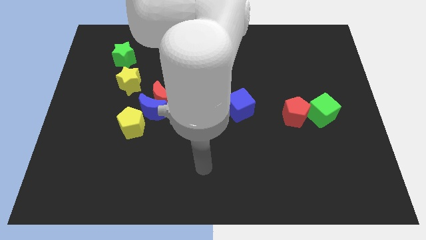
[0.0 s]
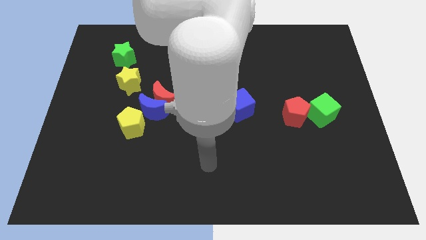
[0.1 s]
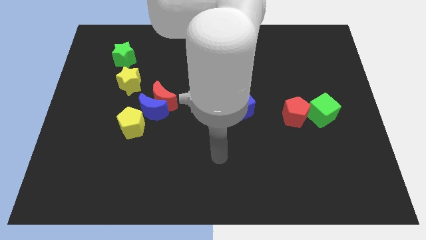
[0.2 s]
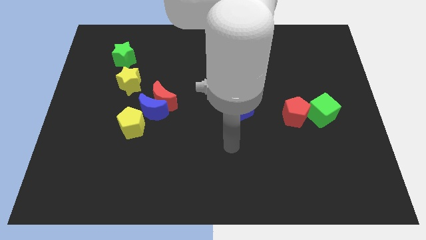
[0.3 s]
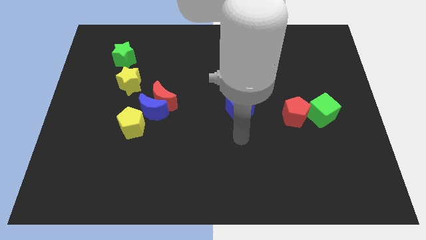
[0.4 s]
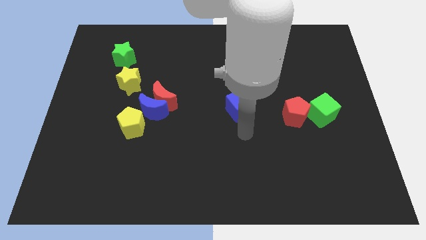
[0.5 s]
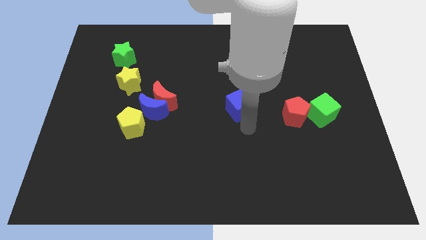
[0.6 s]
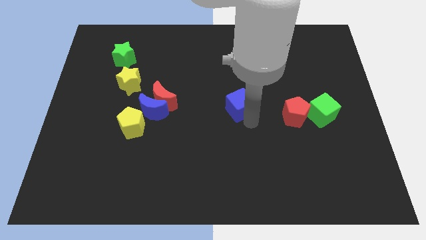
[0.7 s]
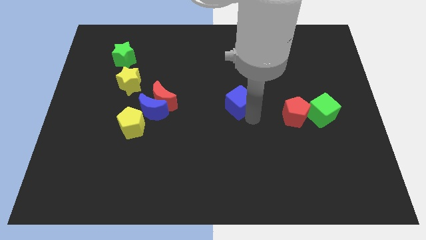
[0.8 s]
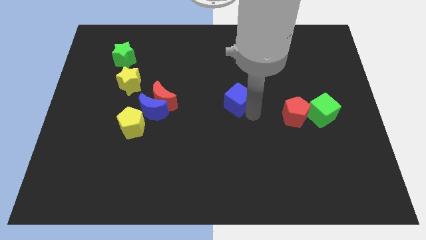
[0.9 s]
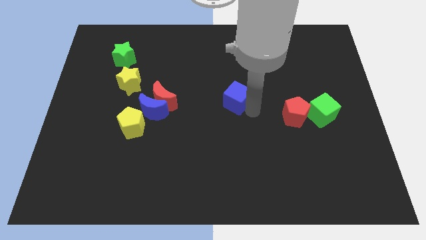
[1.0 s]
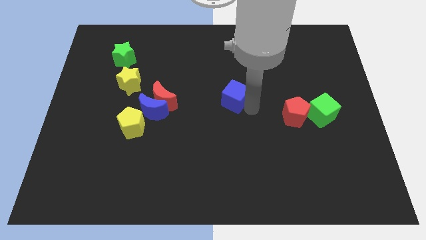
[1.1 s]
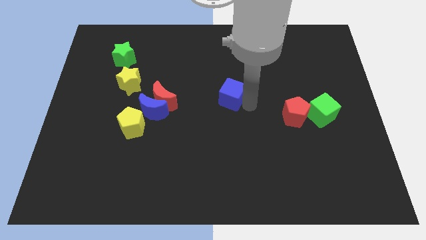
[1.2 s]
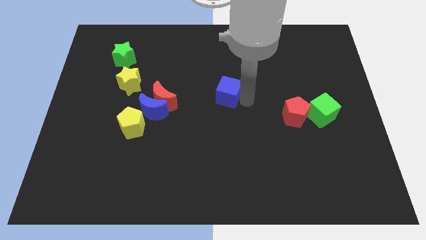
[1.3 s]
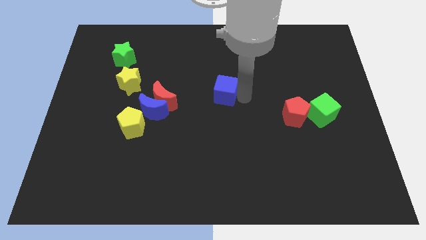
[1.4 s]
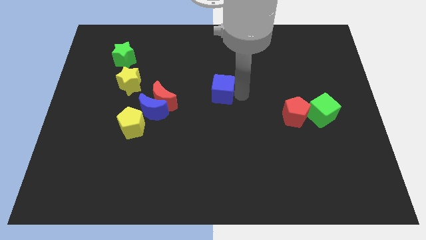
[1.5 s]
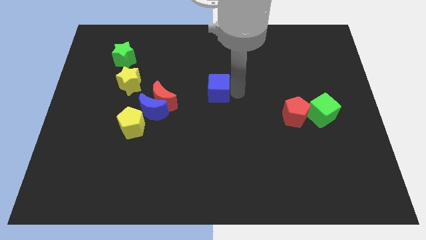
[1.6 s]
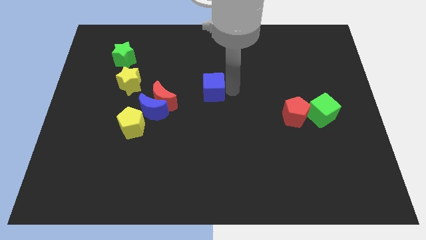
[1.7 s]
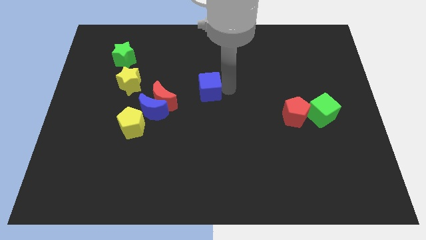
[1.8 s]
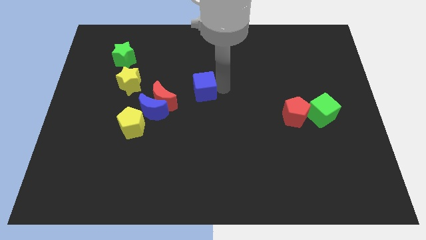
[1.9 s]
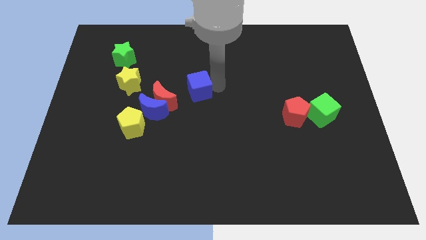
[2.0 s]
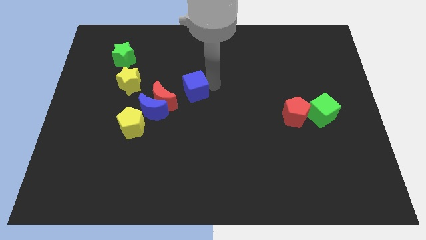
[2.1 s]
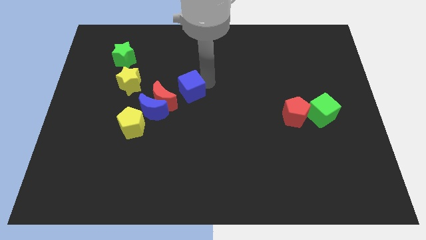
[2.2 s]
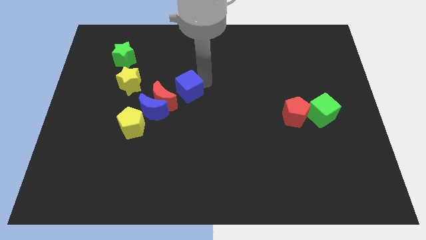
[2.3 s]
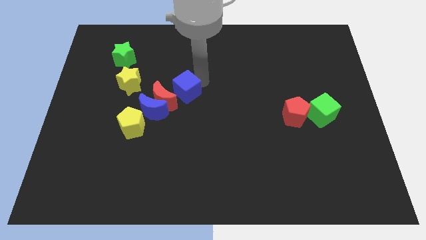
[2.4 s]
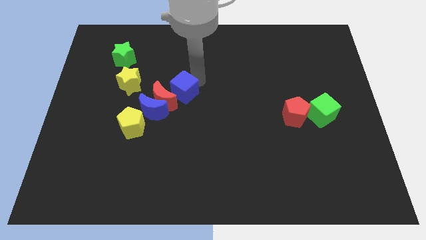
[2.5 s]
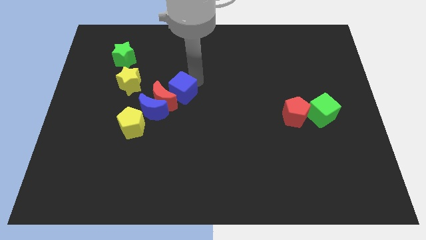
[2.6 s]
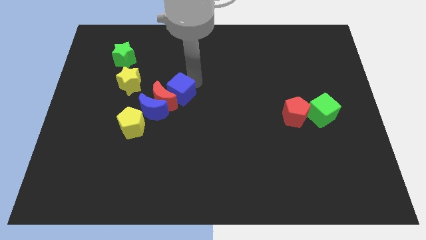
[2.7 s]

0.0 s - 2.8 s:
slide the blue cube next to the red moon

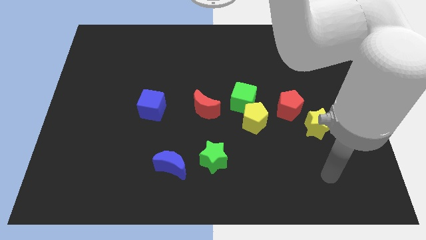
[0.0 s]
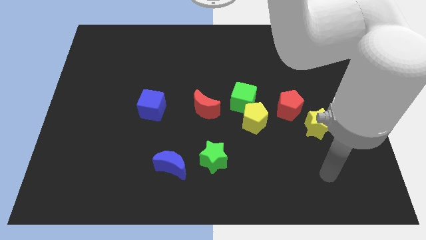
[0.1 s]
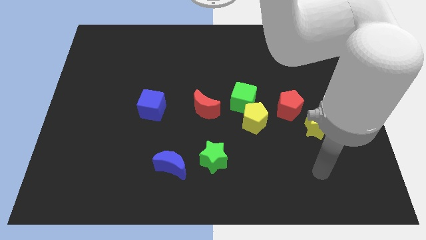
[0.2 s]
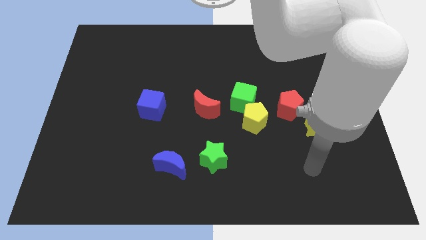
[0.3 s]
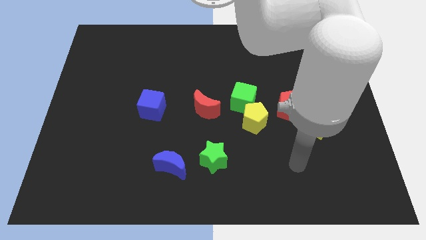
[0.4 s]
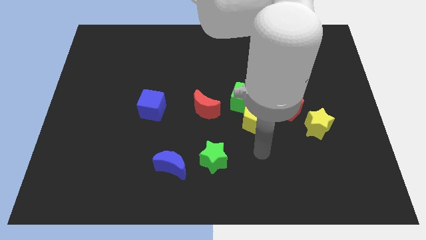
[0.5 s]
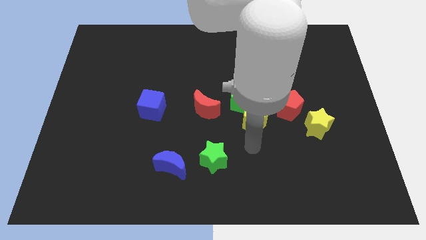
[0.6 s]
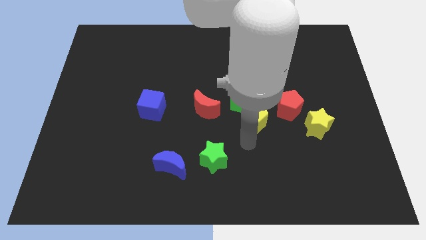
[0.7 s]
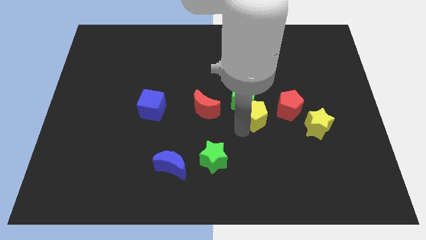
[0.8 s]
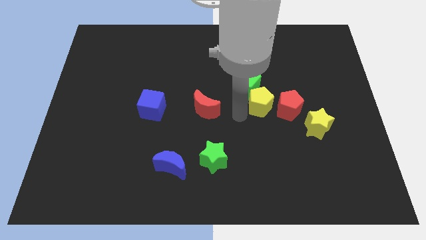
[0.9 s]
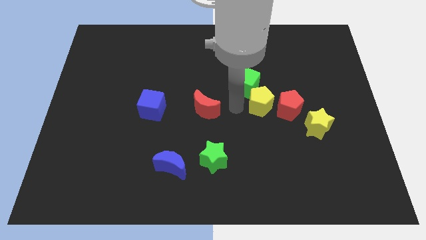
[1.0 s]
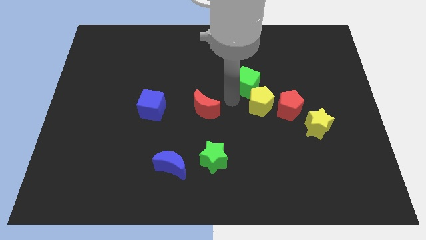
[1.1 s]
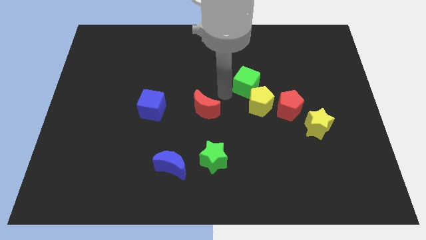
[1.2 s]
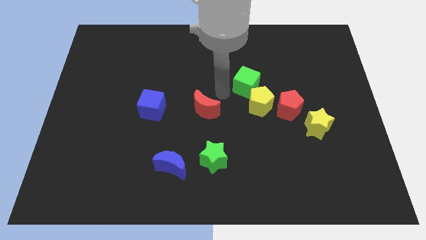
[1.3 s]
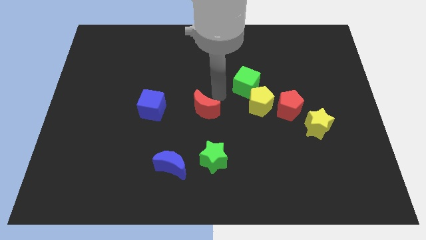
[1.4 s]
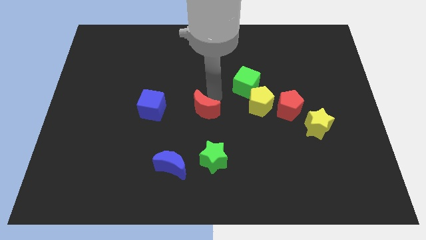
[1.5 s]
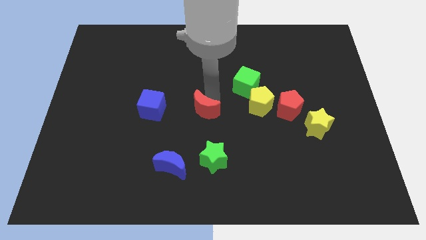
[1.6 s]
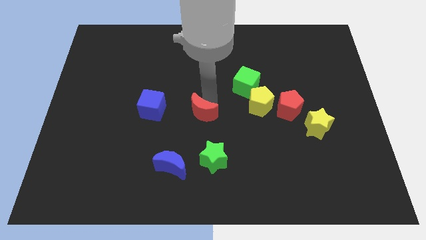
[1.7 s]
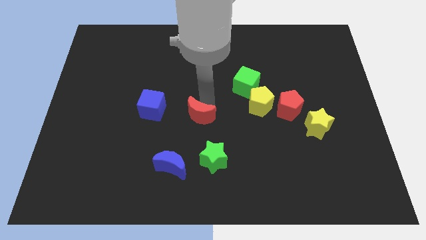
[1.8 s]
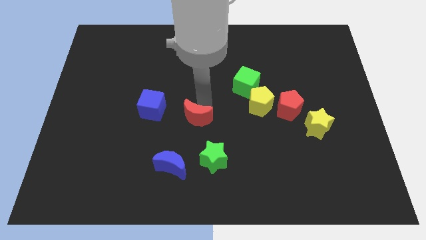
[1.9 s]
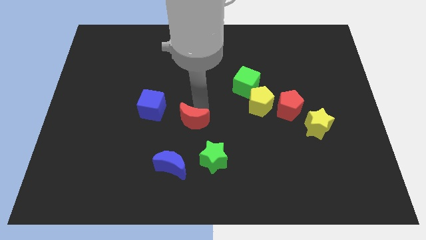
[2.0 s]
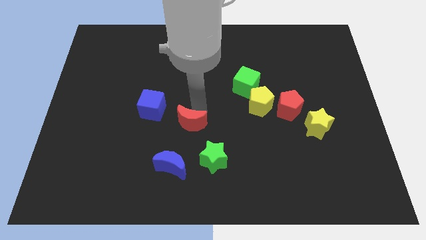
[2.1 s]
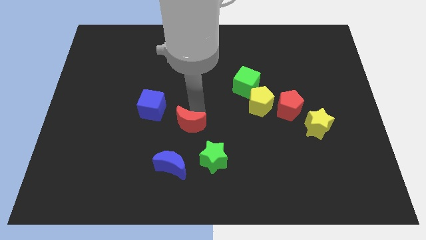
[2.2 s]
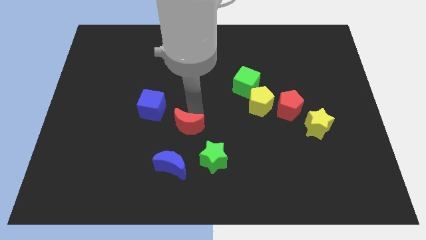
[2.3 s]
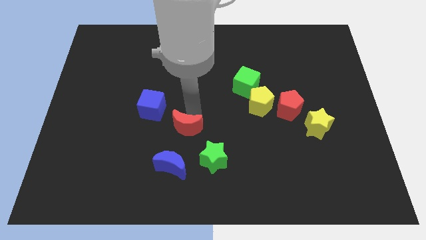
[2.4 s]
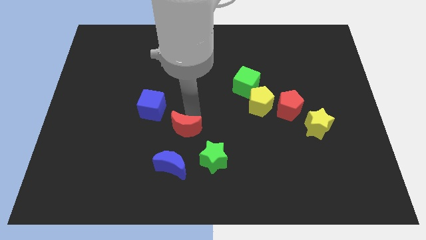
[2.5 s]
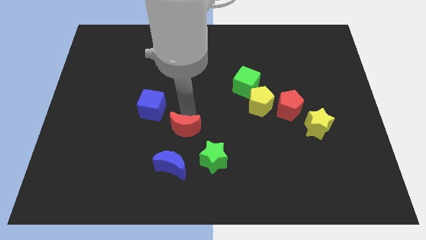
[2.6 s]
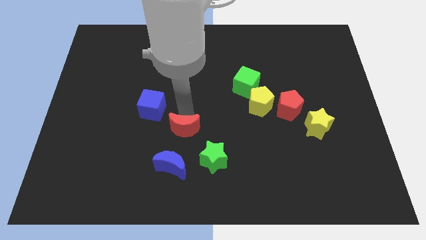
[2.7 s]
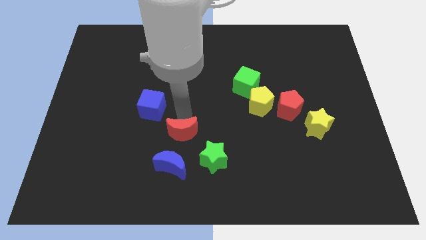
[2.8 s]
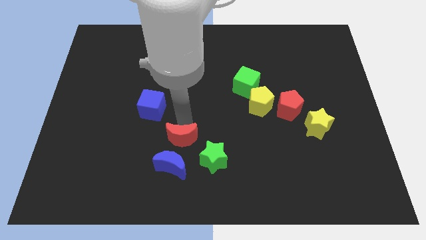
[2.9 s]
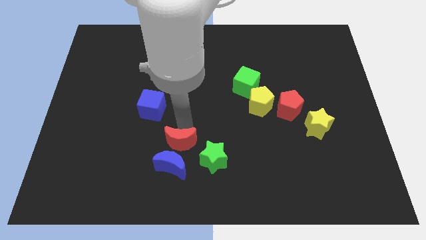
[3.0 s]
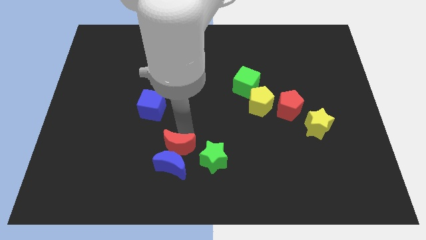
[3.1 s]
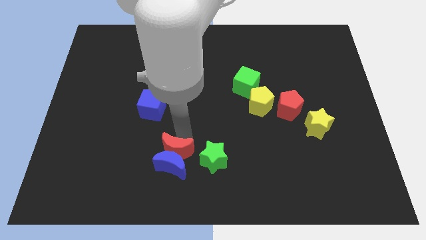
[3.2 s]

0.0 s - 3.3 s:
push the red moon towards the blue moon

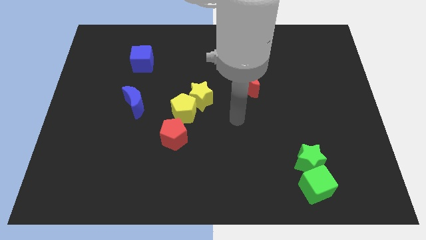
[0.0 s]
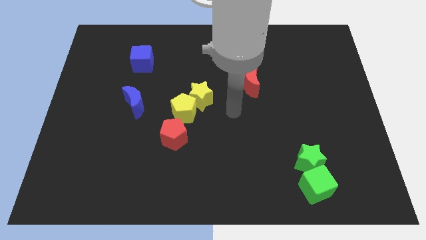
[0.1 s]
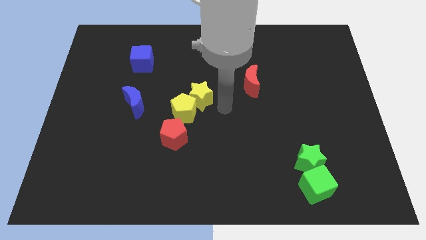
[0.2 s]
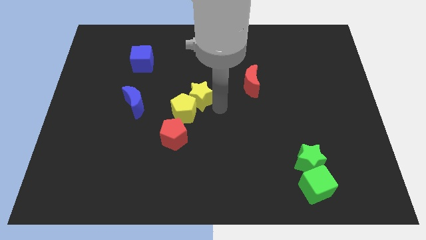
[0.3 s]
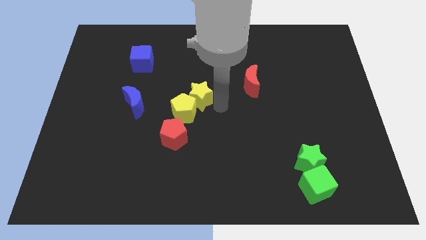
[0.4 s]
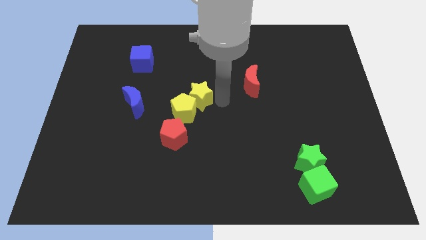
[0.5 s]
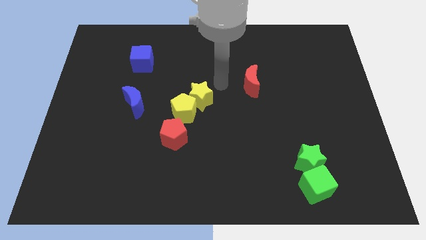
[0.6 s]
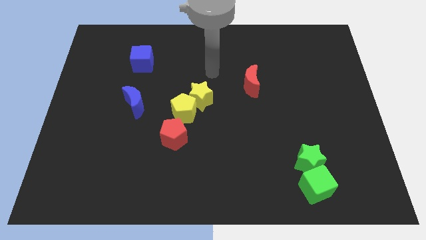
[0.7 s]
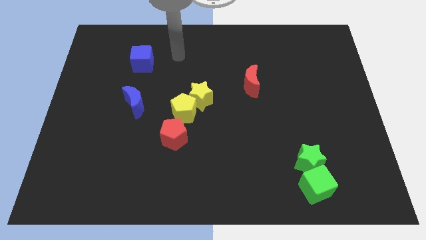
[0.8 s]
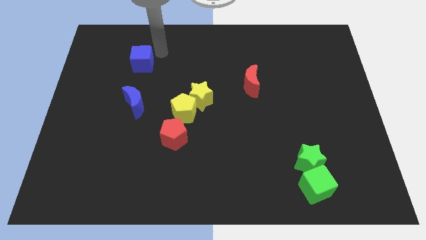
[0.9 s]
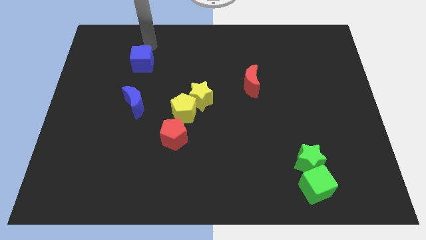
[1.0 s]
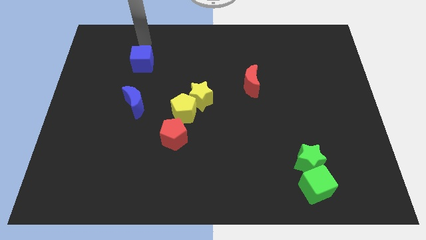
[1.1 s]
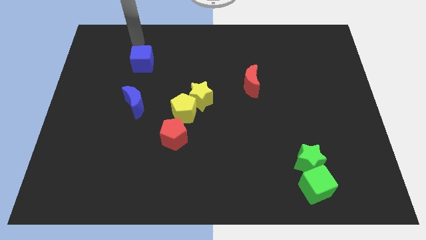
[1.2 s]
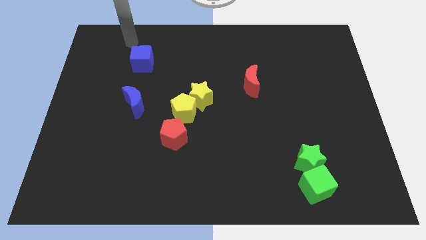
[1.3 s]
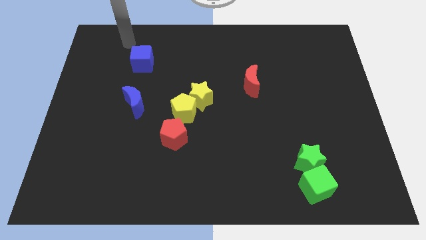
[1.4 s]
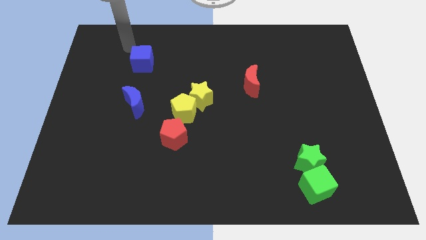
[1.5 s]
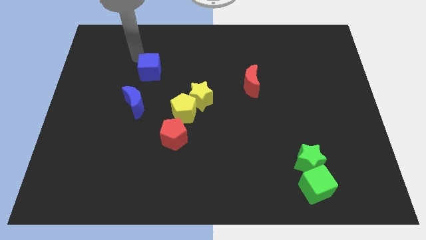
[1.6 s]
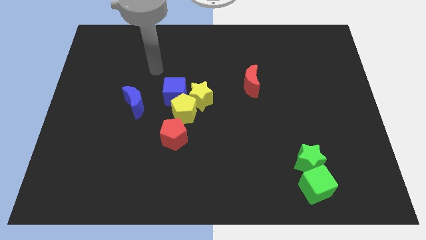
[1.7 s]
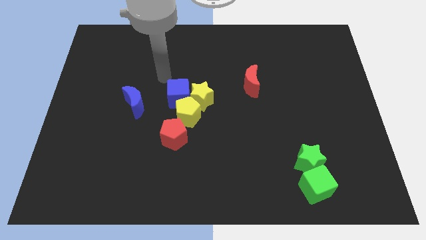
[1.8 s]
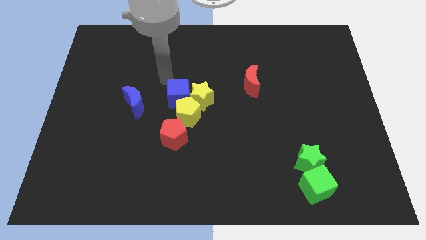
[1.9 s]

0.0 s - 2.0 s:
push the blue cube next to the yellow star
